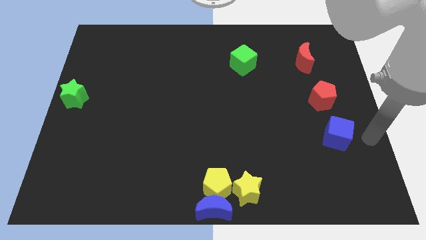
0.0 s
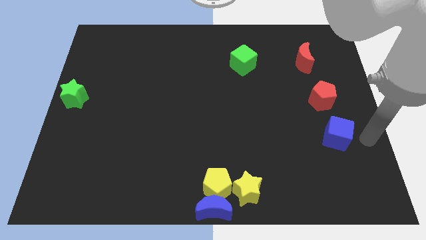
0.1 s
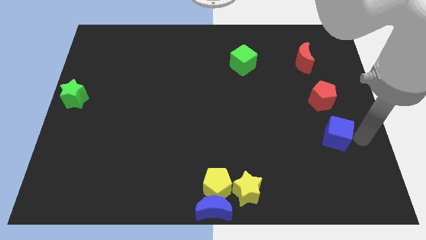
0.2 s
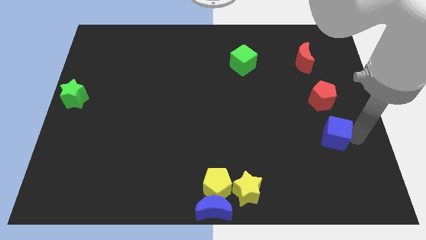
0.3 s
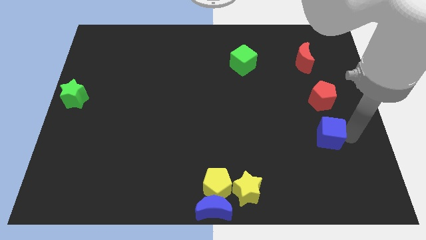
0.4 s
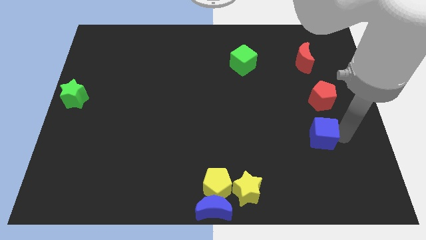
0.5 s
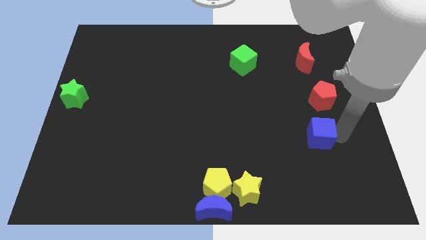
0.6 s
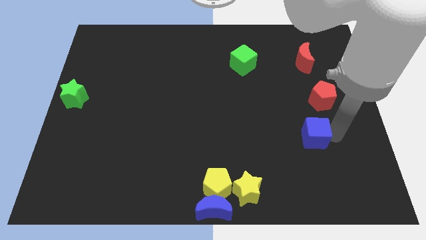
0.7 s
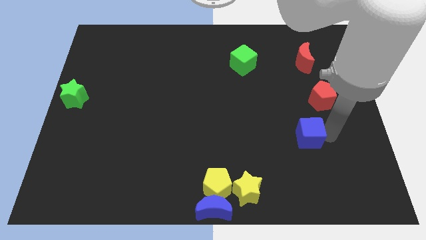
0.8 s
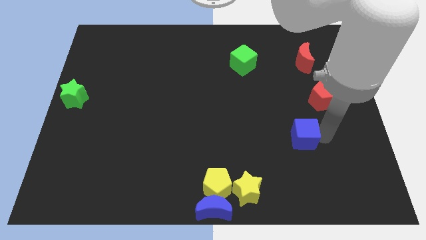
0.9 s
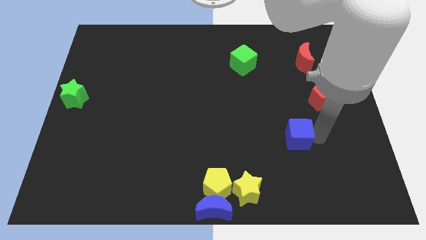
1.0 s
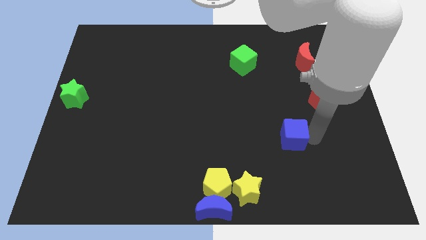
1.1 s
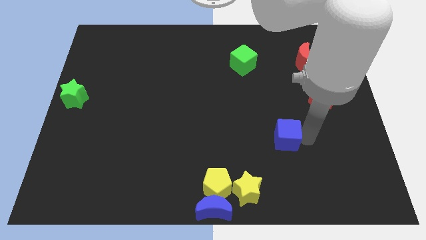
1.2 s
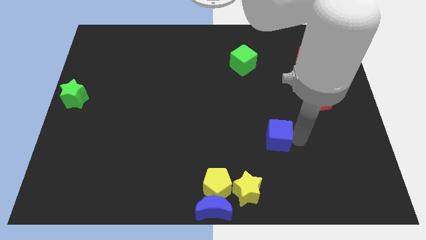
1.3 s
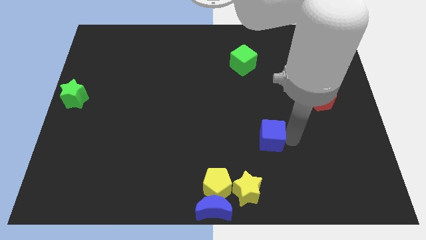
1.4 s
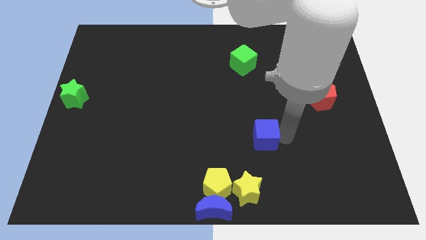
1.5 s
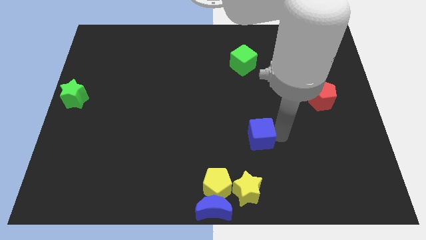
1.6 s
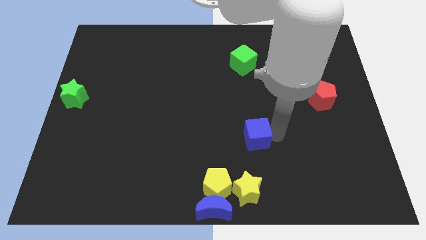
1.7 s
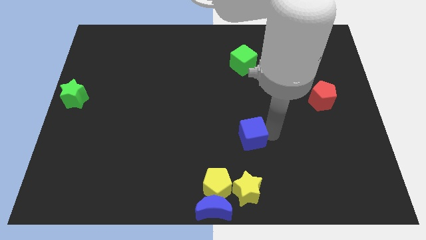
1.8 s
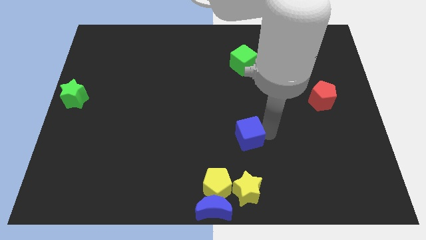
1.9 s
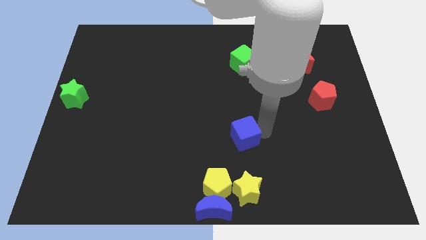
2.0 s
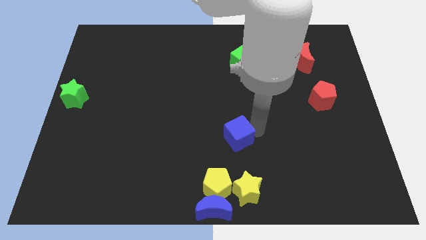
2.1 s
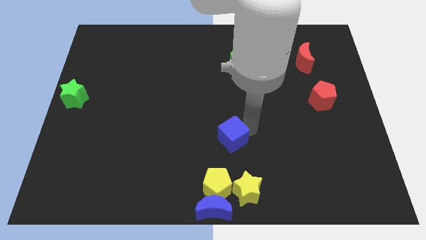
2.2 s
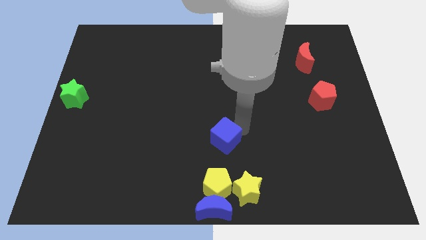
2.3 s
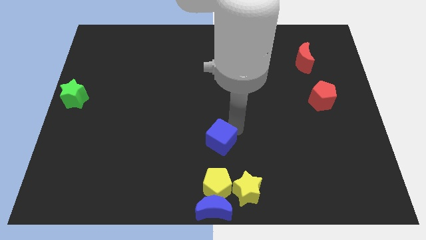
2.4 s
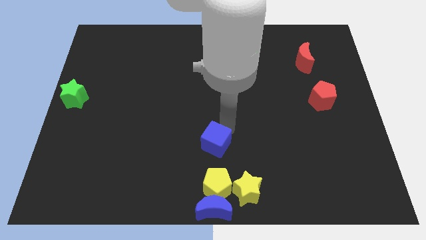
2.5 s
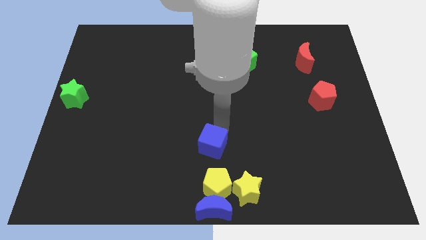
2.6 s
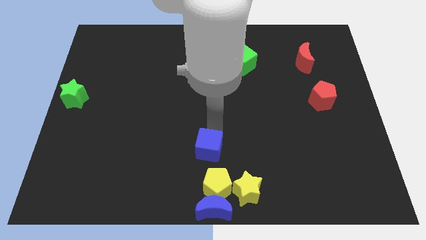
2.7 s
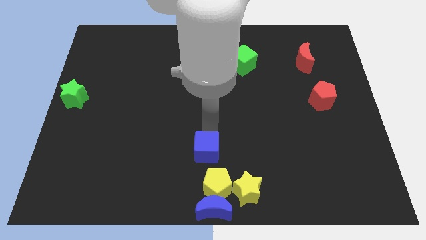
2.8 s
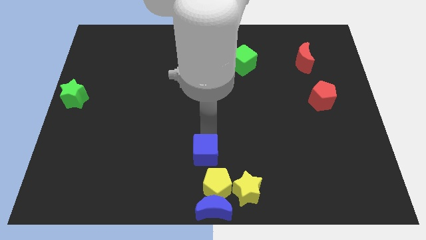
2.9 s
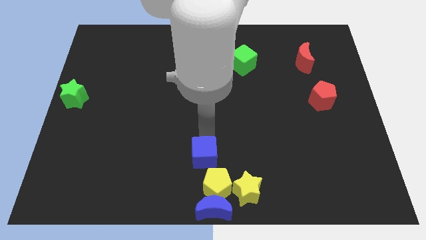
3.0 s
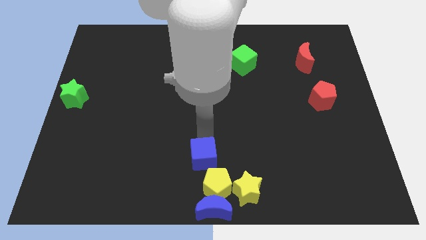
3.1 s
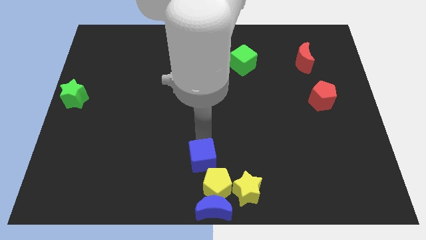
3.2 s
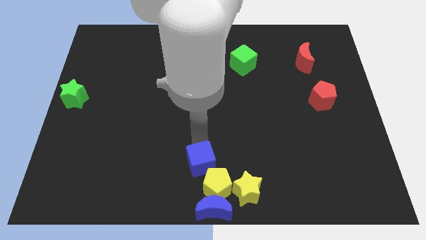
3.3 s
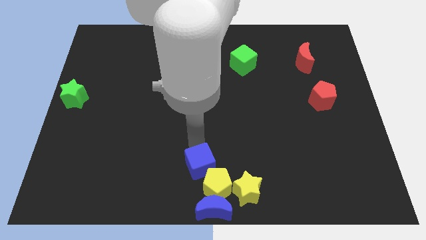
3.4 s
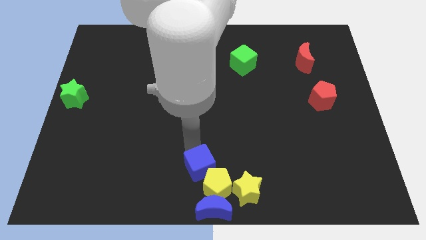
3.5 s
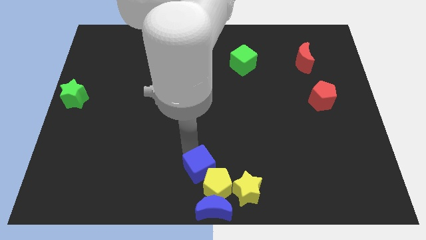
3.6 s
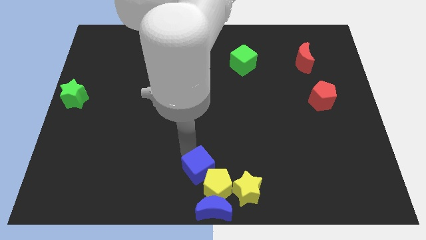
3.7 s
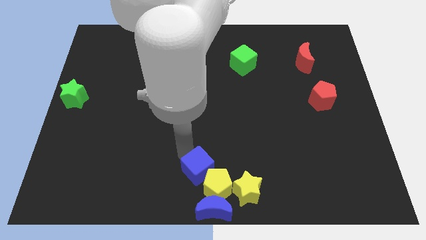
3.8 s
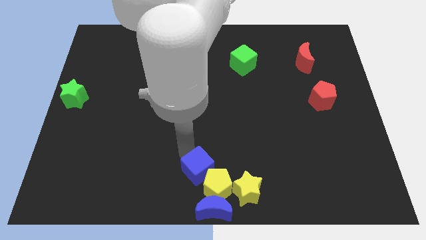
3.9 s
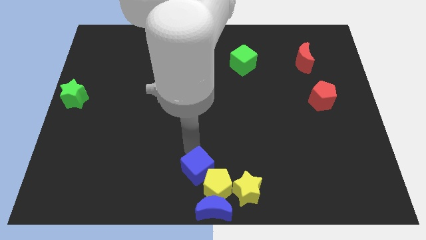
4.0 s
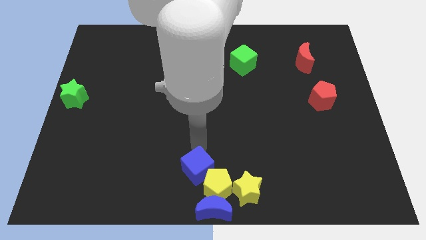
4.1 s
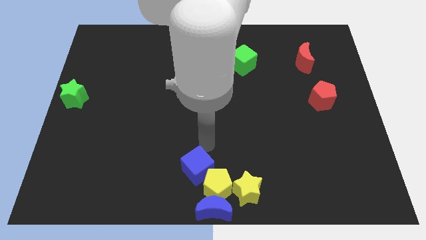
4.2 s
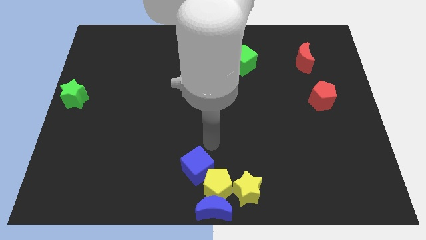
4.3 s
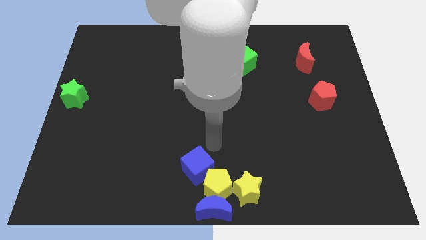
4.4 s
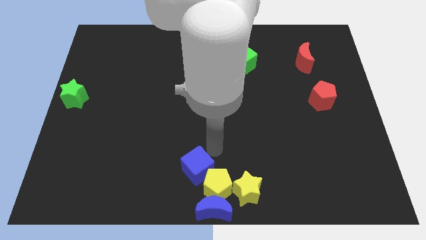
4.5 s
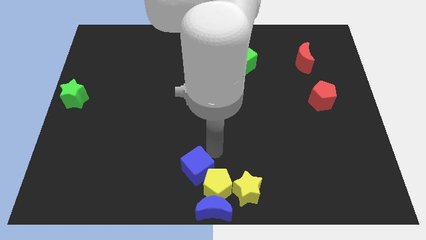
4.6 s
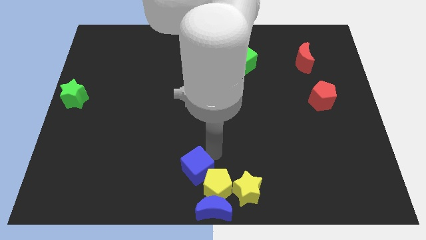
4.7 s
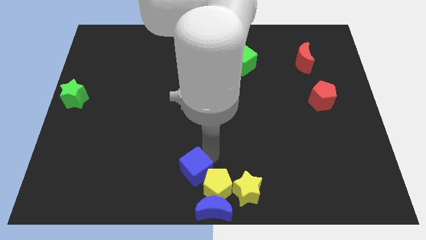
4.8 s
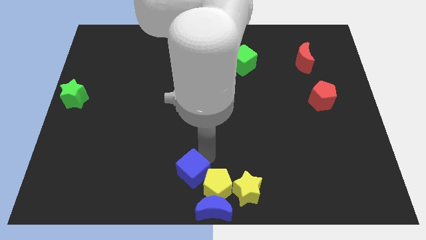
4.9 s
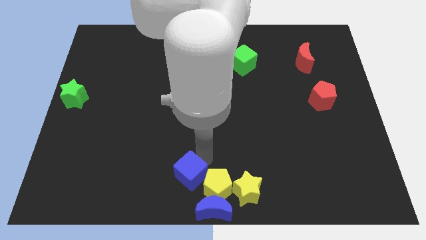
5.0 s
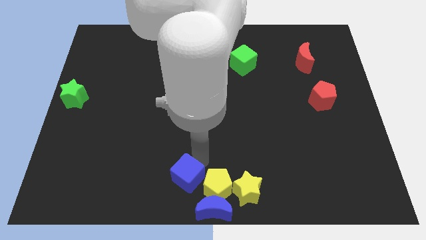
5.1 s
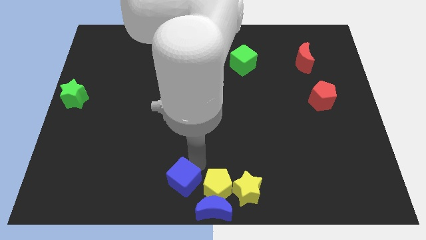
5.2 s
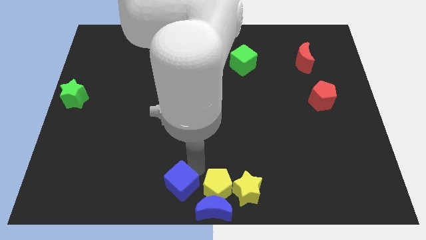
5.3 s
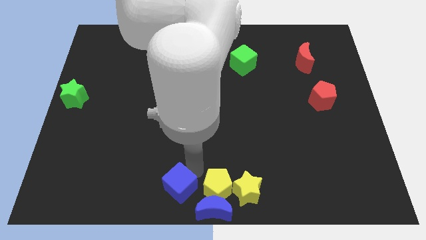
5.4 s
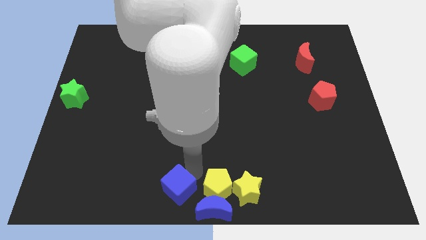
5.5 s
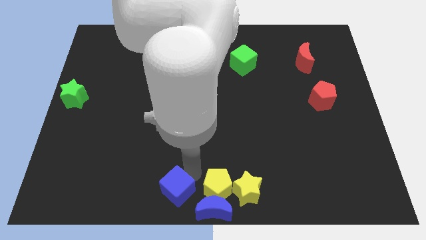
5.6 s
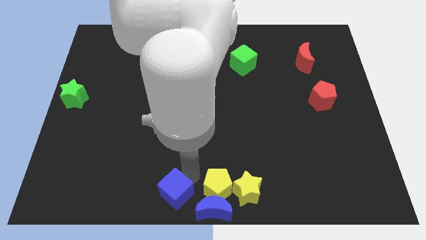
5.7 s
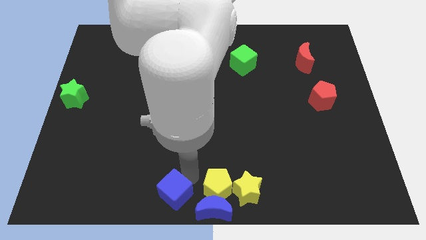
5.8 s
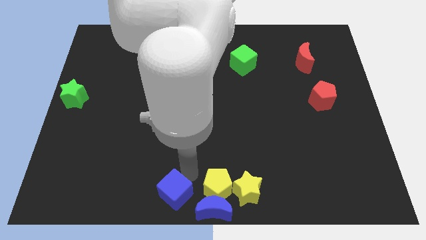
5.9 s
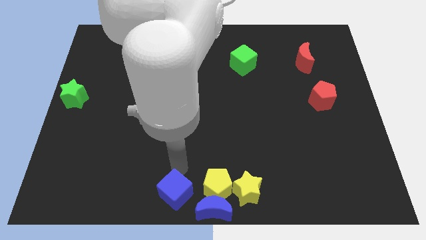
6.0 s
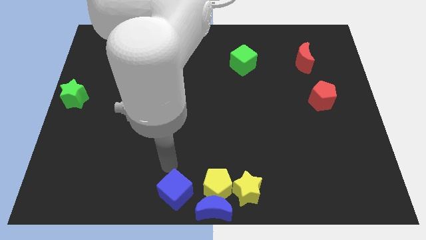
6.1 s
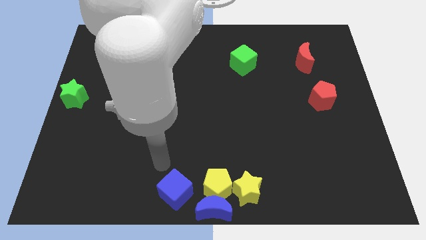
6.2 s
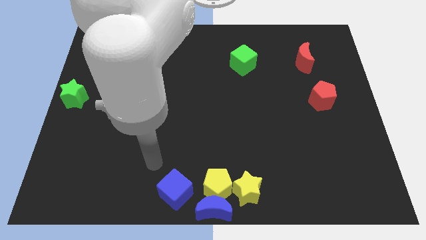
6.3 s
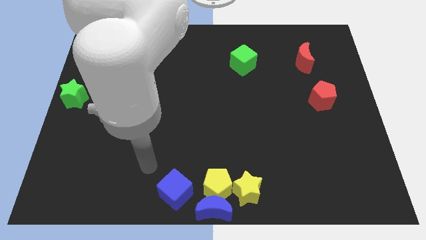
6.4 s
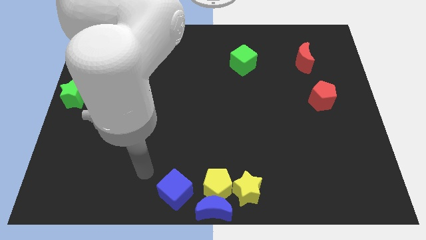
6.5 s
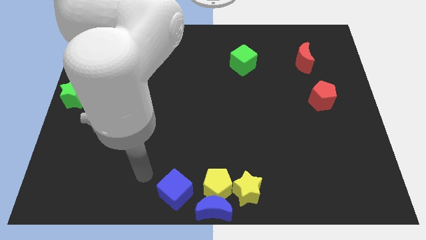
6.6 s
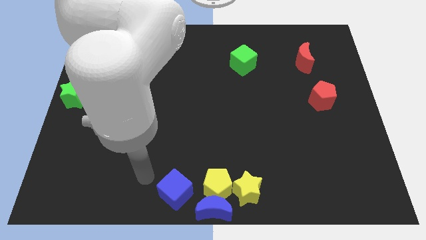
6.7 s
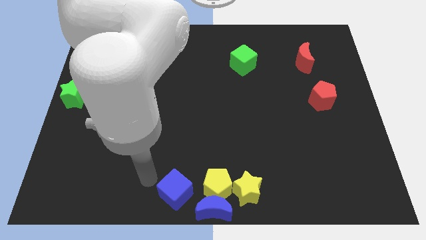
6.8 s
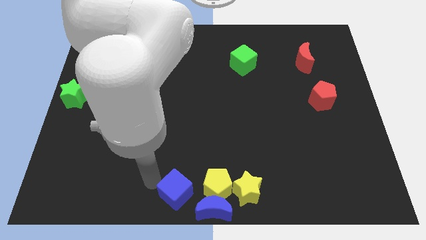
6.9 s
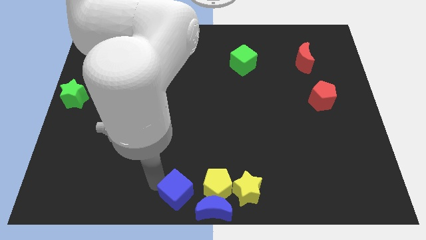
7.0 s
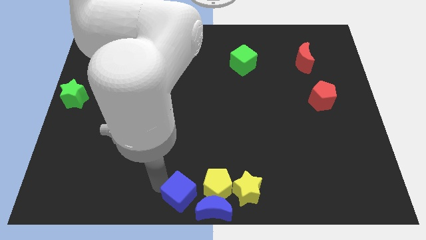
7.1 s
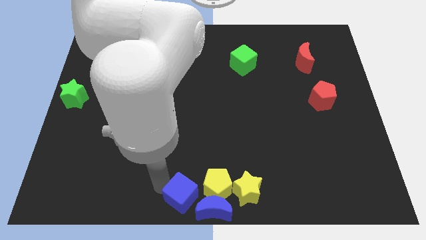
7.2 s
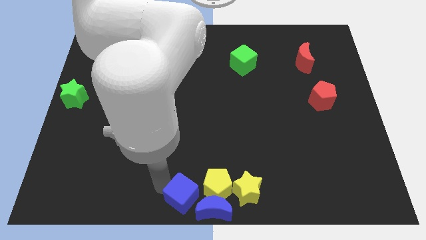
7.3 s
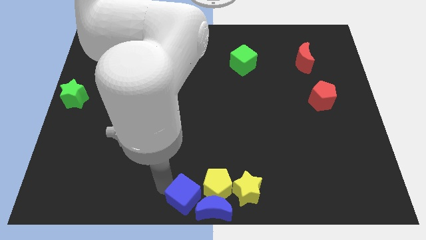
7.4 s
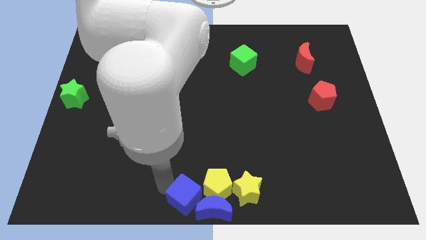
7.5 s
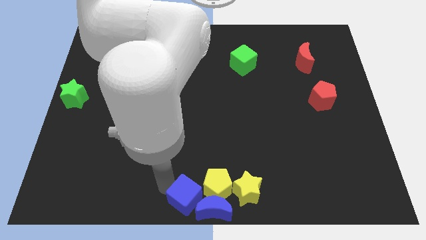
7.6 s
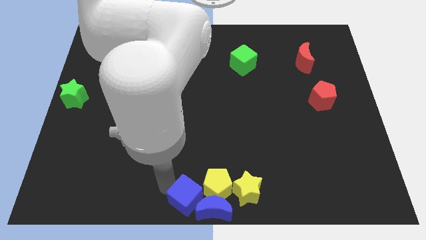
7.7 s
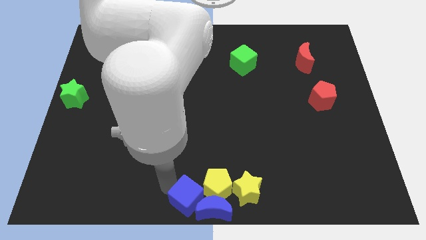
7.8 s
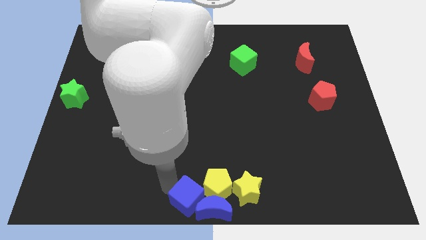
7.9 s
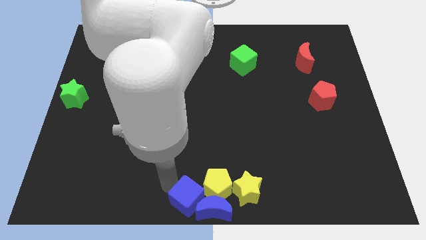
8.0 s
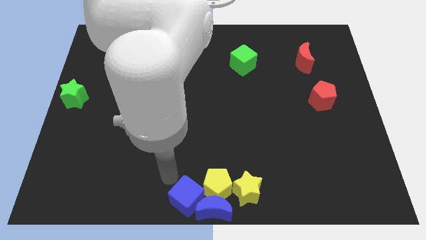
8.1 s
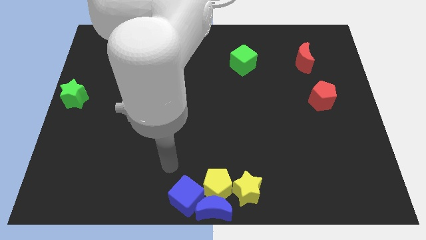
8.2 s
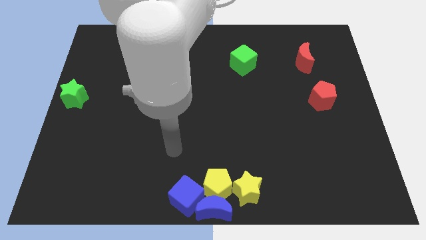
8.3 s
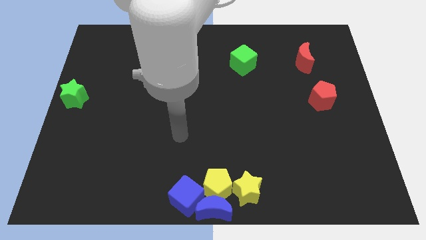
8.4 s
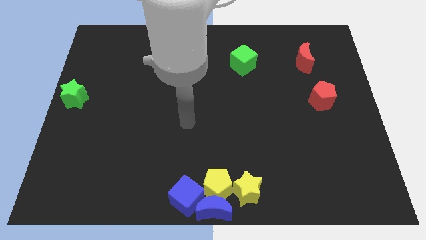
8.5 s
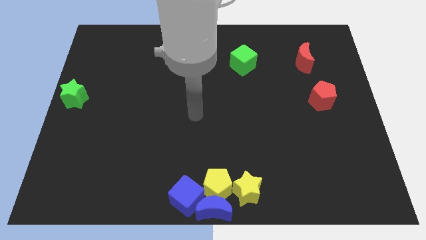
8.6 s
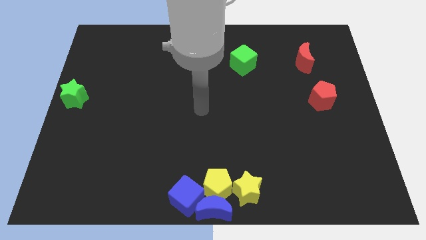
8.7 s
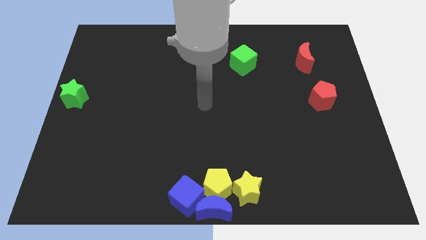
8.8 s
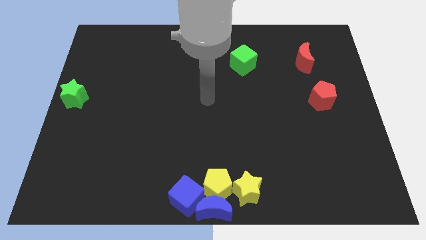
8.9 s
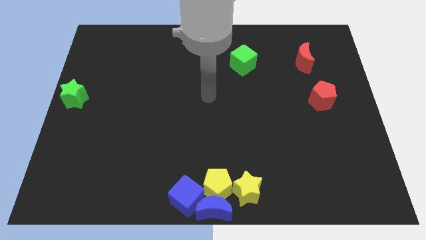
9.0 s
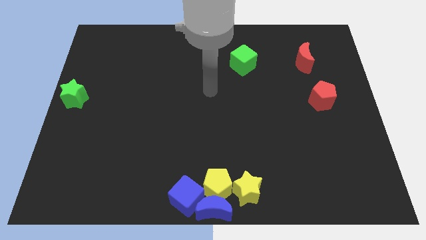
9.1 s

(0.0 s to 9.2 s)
place the blue cube to the left of yellow pentagon and the blue crescent
